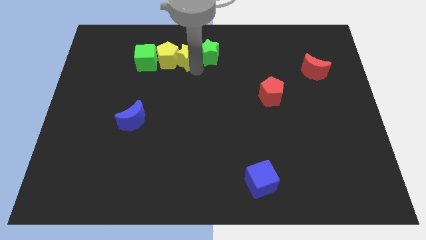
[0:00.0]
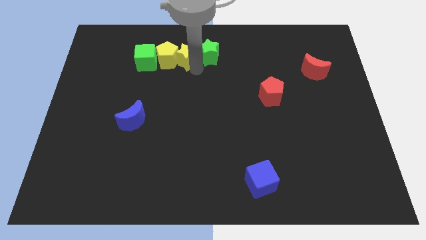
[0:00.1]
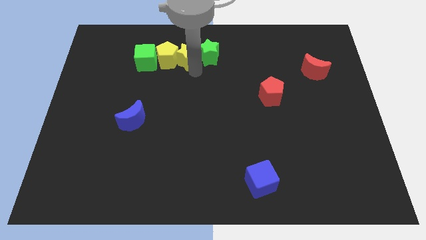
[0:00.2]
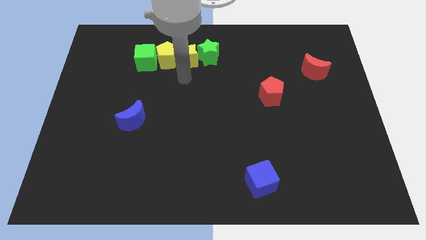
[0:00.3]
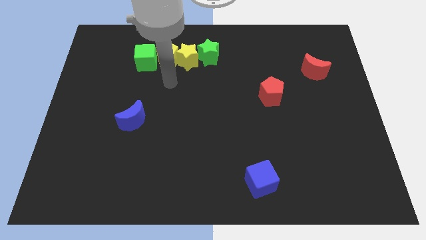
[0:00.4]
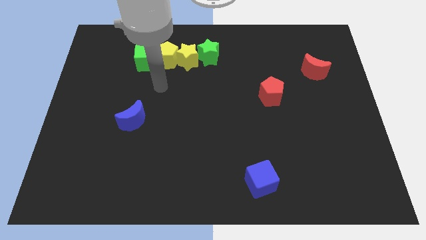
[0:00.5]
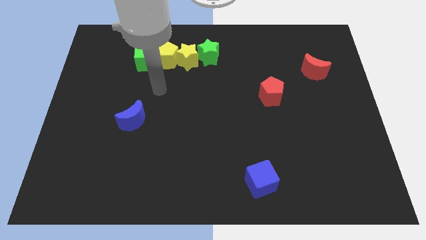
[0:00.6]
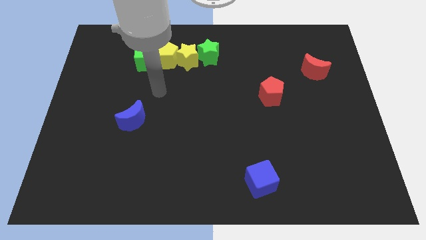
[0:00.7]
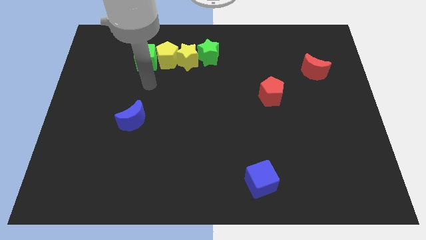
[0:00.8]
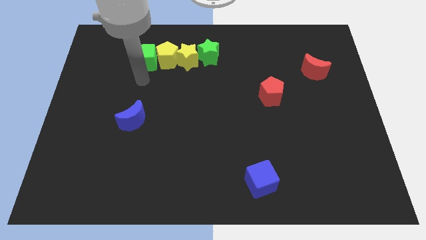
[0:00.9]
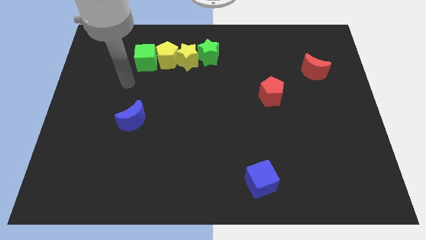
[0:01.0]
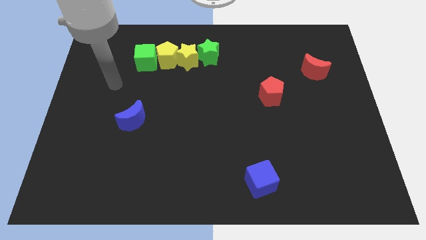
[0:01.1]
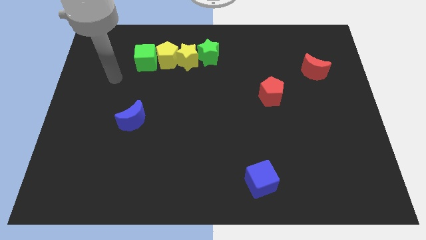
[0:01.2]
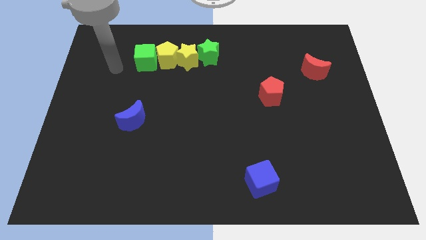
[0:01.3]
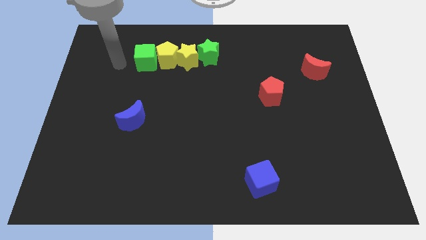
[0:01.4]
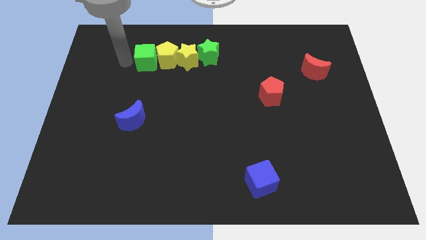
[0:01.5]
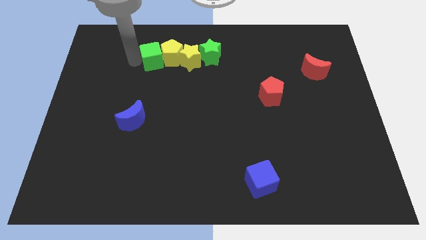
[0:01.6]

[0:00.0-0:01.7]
place your arm to the left of green cube

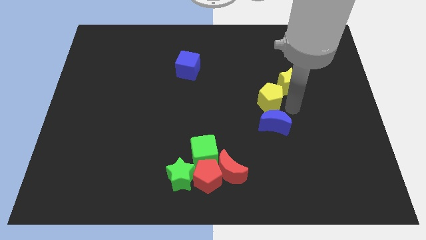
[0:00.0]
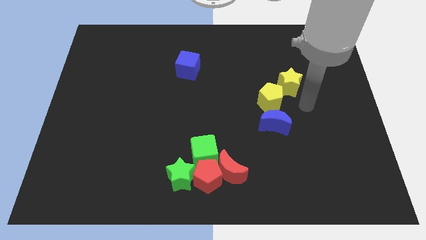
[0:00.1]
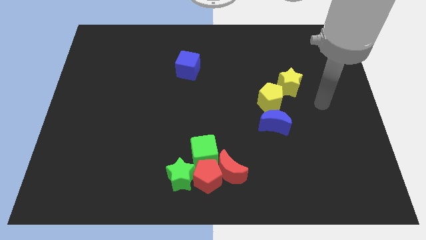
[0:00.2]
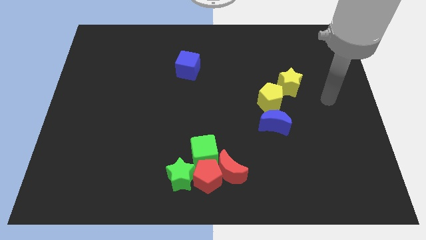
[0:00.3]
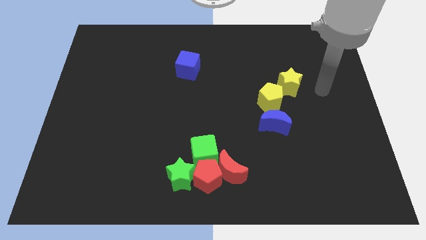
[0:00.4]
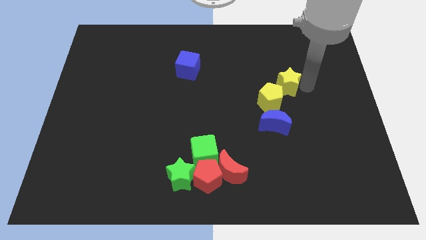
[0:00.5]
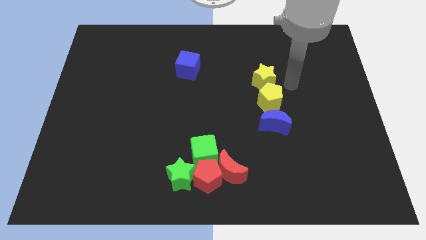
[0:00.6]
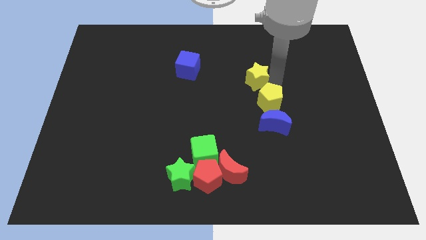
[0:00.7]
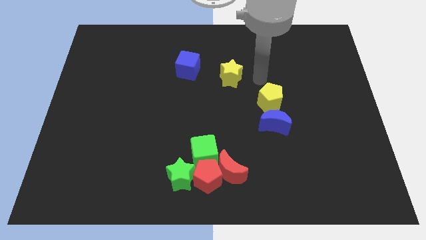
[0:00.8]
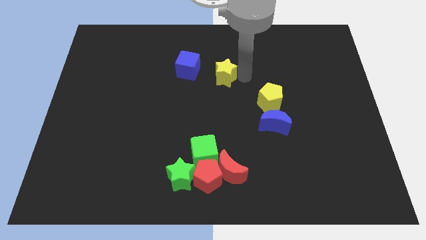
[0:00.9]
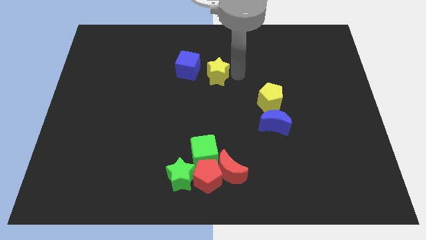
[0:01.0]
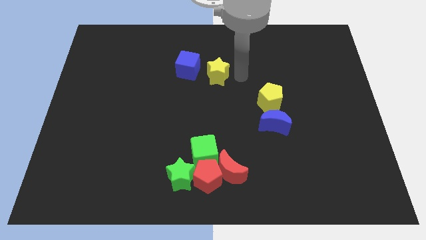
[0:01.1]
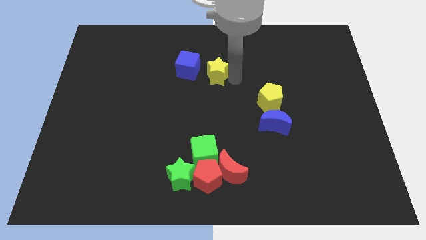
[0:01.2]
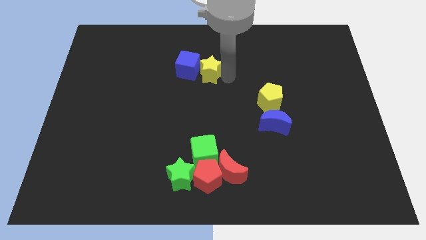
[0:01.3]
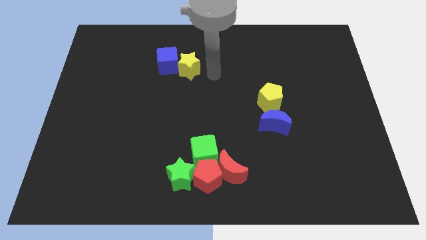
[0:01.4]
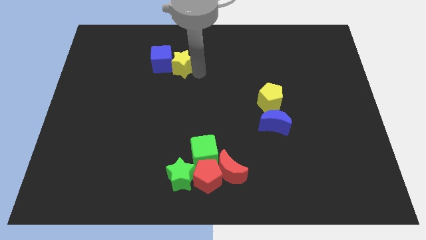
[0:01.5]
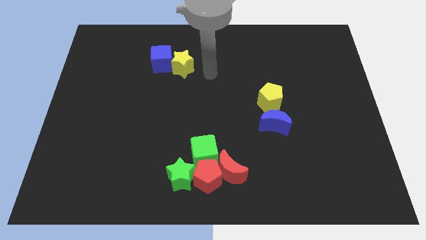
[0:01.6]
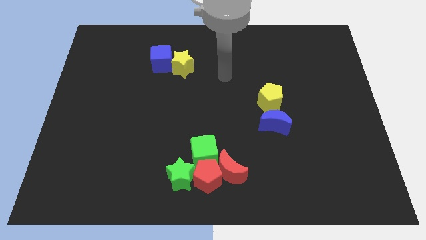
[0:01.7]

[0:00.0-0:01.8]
push the yellow star into the blue cube

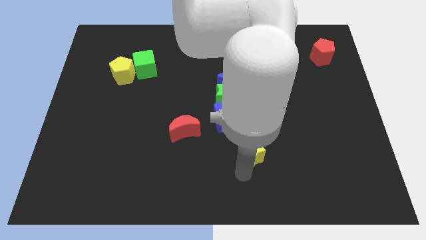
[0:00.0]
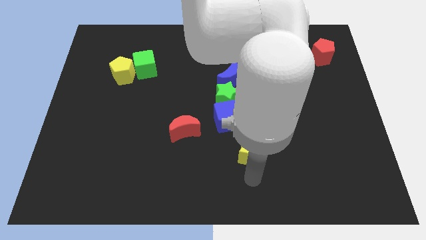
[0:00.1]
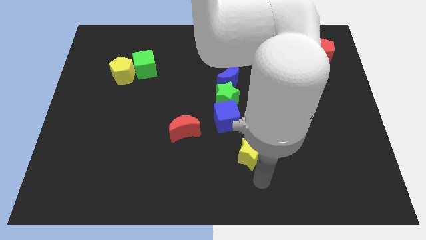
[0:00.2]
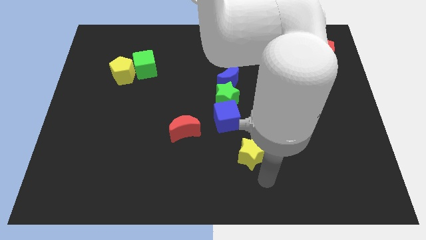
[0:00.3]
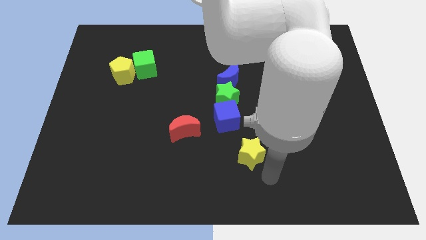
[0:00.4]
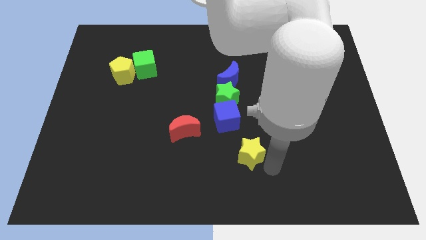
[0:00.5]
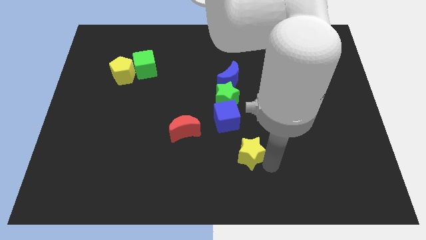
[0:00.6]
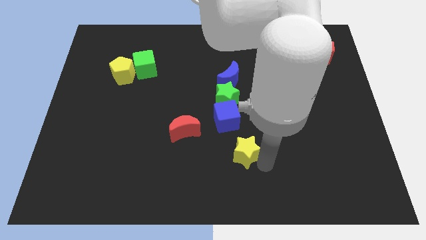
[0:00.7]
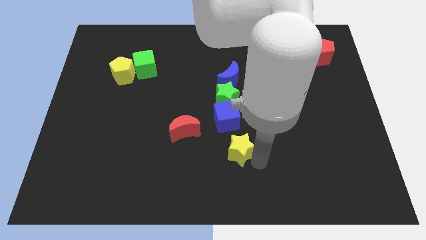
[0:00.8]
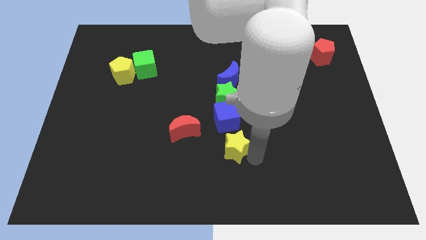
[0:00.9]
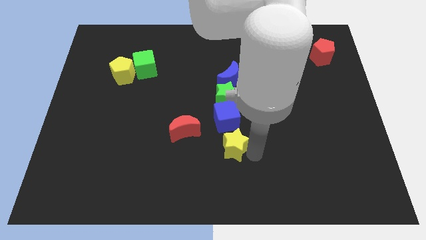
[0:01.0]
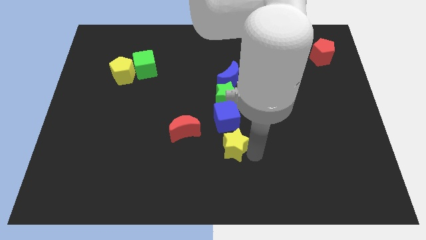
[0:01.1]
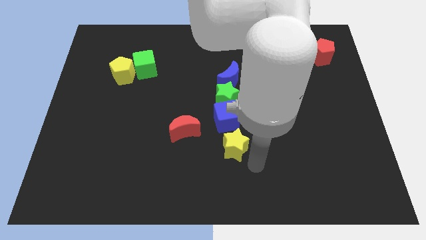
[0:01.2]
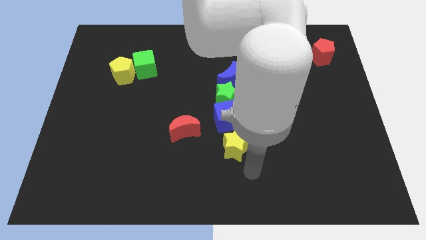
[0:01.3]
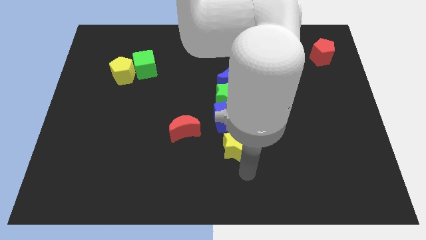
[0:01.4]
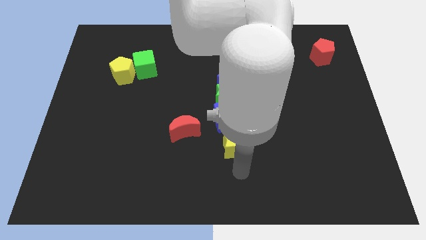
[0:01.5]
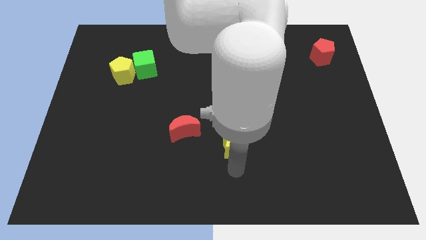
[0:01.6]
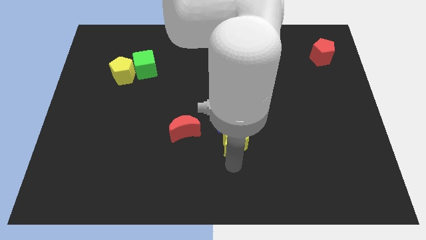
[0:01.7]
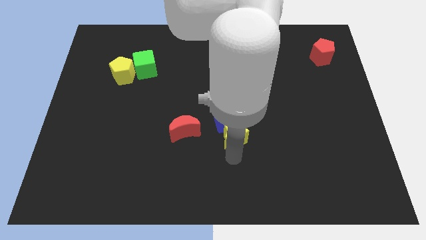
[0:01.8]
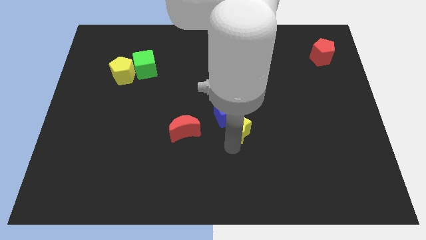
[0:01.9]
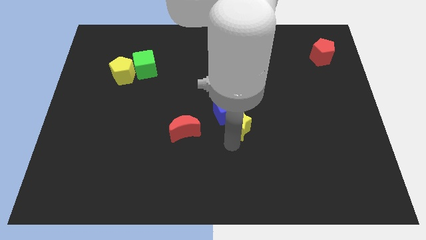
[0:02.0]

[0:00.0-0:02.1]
move the yellow star into the bottom side of the blue cube

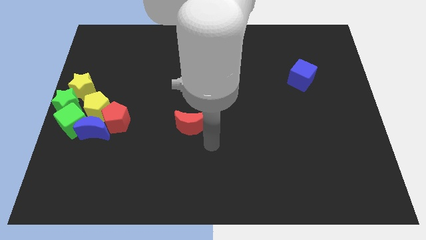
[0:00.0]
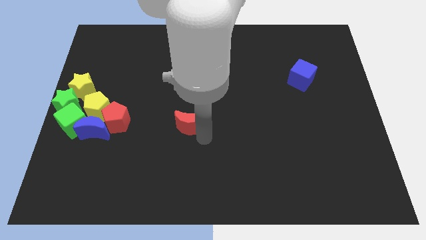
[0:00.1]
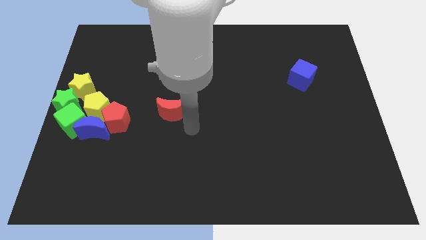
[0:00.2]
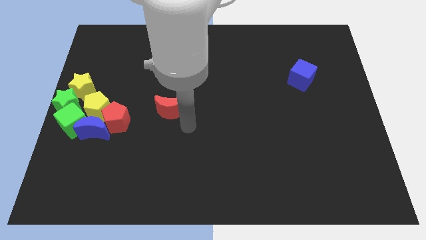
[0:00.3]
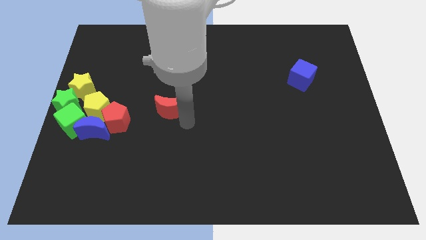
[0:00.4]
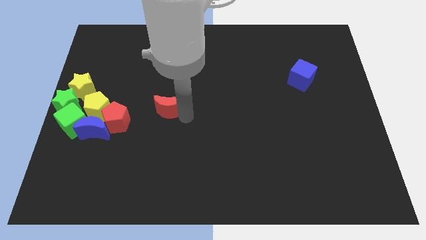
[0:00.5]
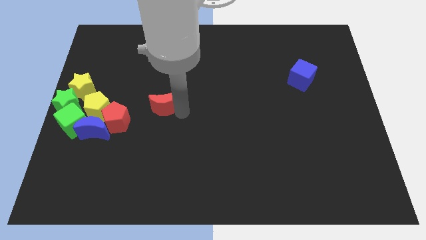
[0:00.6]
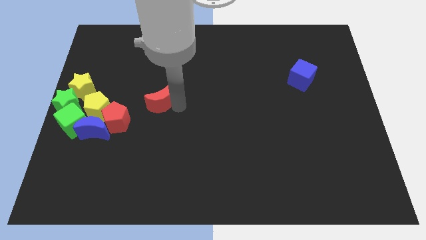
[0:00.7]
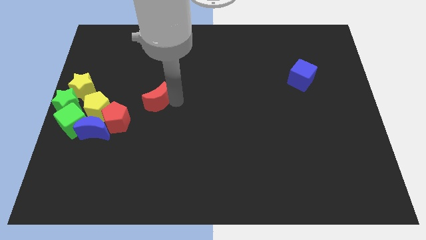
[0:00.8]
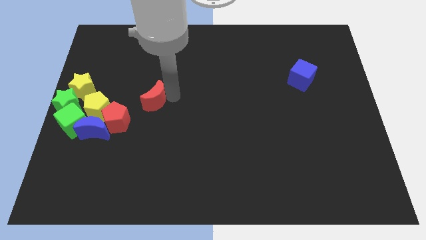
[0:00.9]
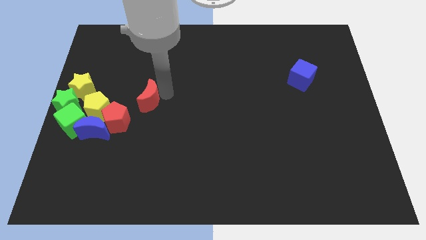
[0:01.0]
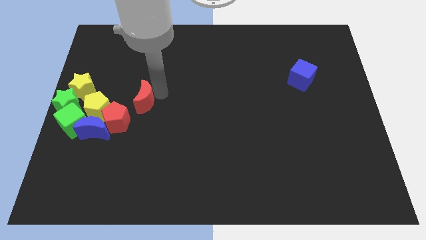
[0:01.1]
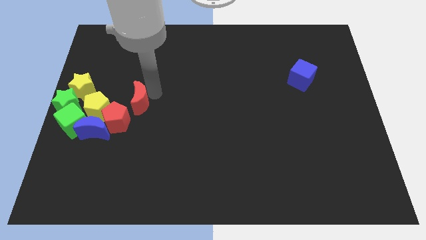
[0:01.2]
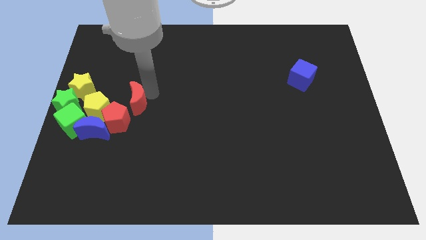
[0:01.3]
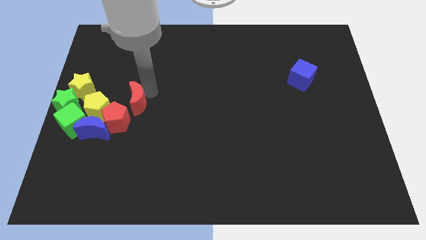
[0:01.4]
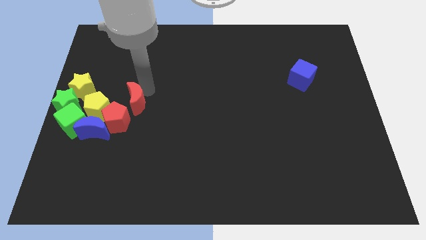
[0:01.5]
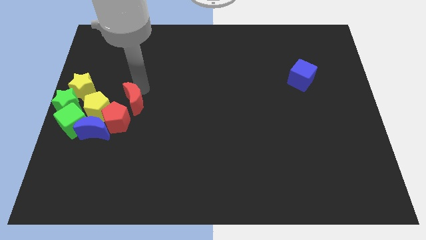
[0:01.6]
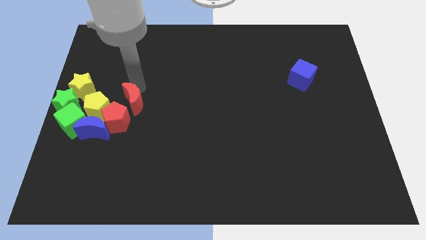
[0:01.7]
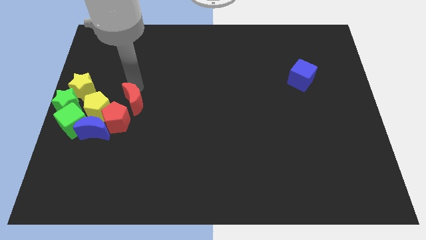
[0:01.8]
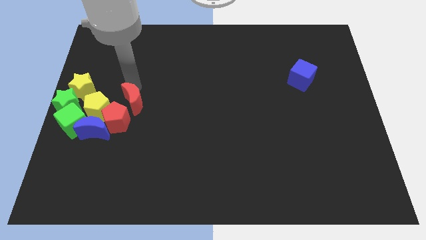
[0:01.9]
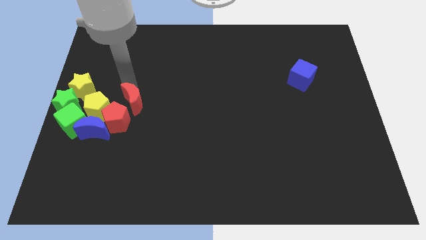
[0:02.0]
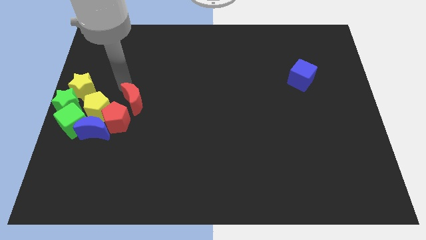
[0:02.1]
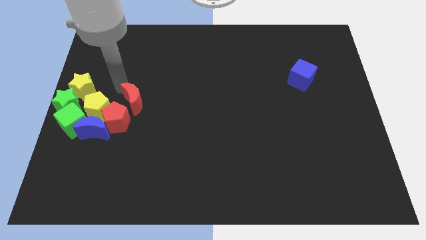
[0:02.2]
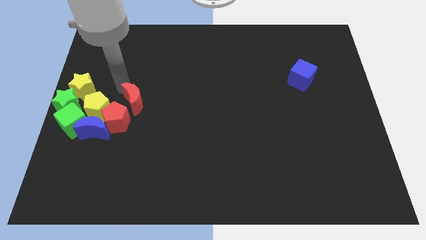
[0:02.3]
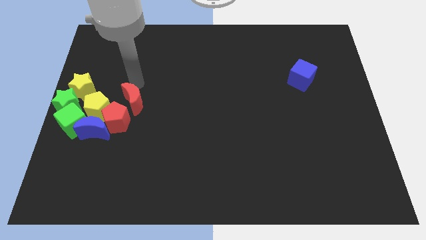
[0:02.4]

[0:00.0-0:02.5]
place the red moon to the top right of the red pentagon

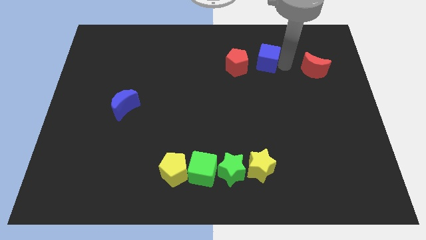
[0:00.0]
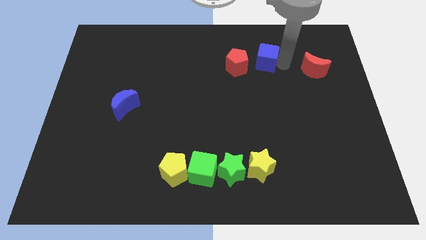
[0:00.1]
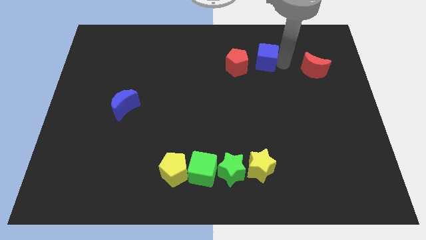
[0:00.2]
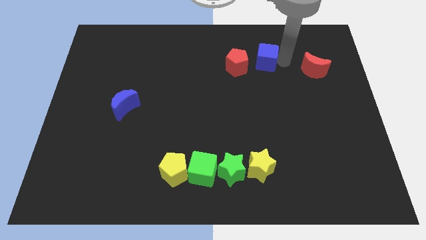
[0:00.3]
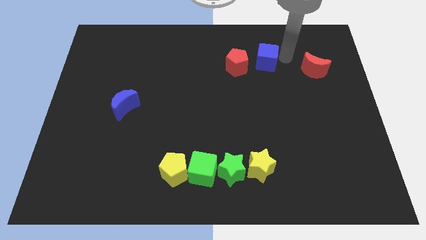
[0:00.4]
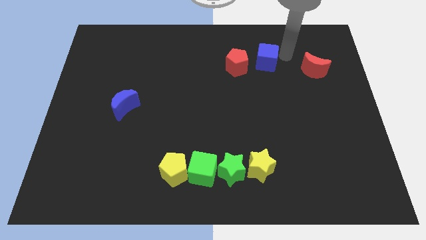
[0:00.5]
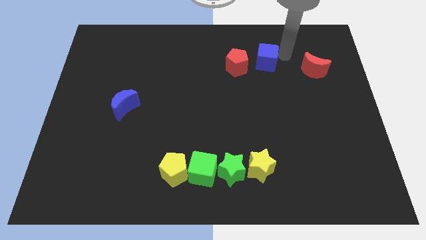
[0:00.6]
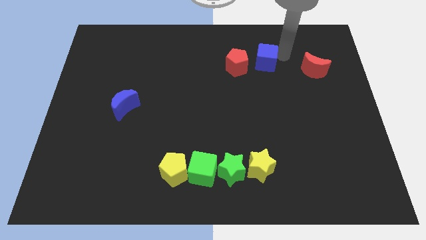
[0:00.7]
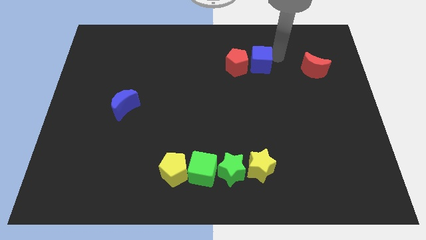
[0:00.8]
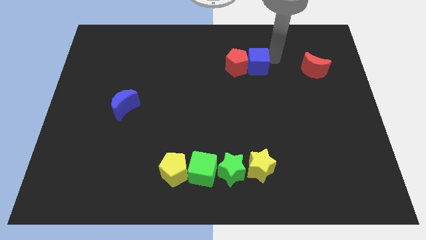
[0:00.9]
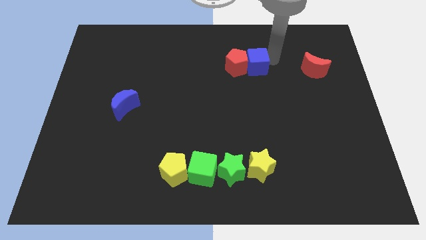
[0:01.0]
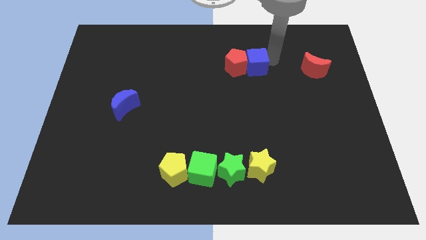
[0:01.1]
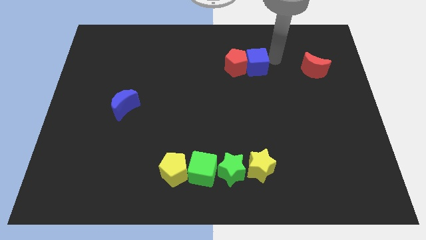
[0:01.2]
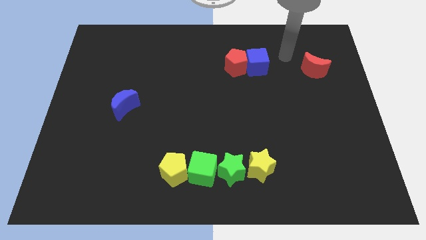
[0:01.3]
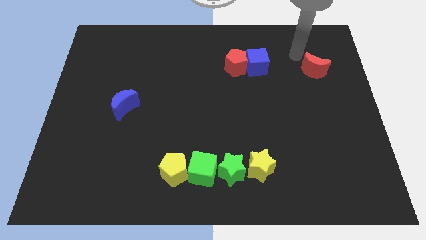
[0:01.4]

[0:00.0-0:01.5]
push the blue cube into red pentagon
